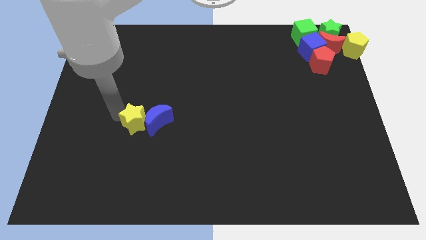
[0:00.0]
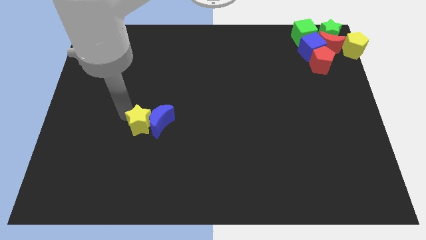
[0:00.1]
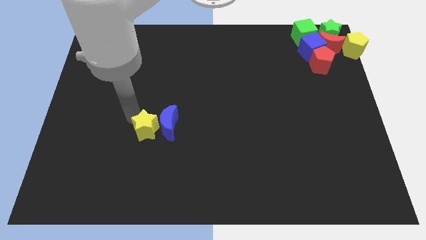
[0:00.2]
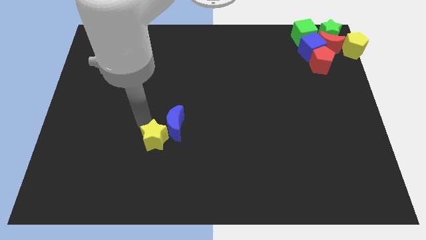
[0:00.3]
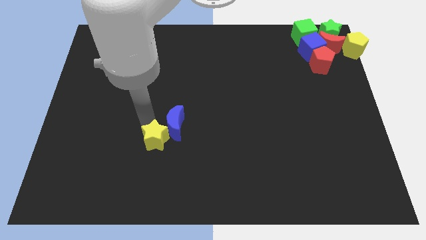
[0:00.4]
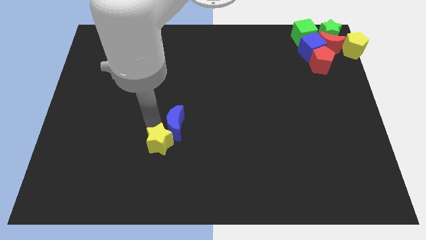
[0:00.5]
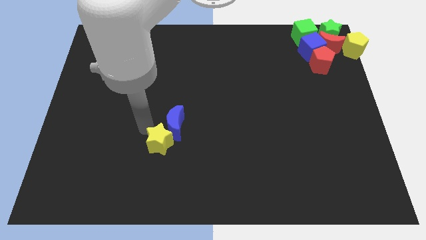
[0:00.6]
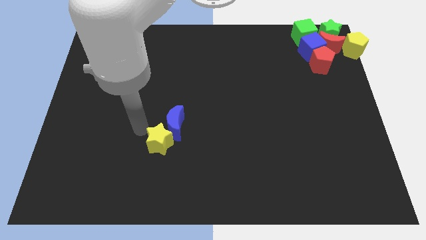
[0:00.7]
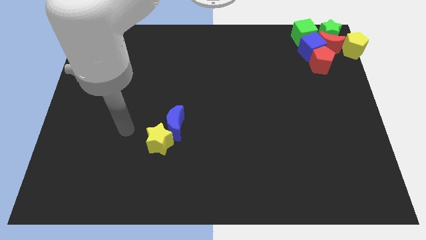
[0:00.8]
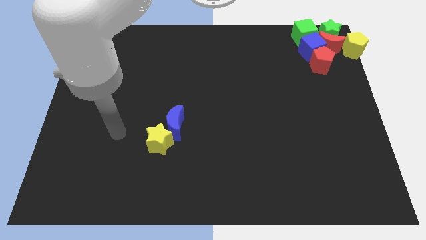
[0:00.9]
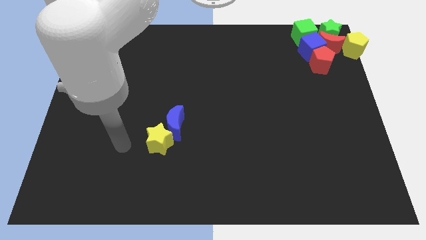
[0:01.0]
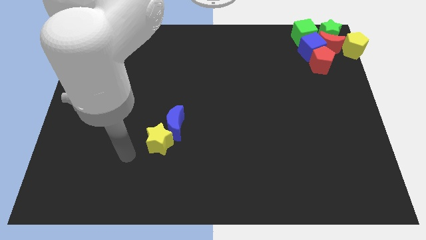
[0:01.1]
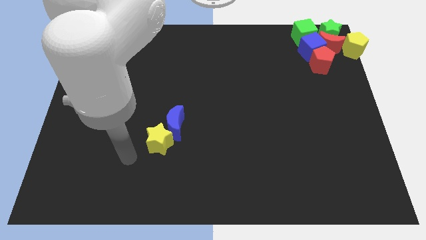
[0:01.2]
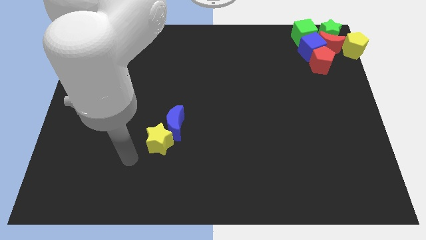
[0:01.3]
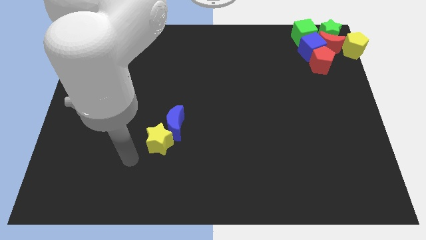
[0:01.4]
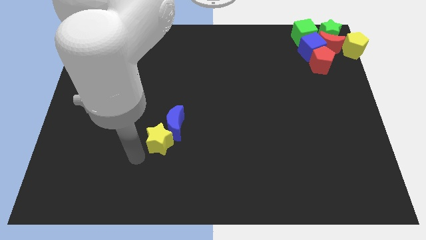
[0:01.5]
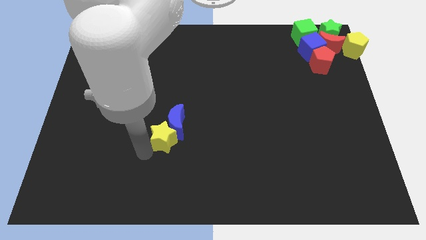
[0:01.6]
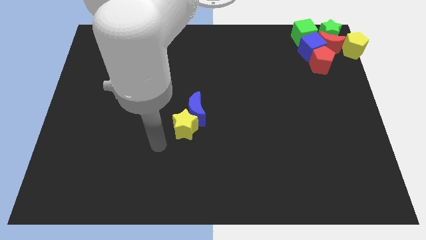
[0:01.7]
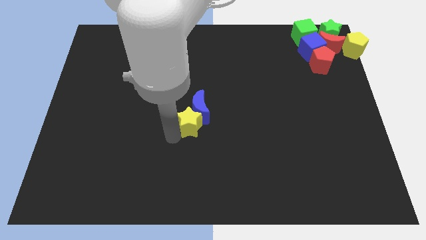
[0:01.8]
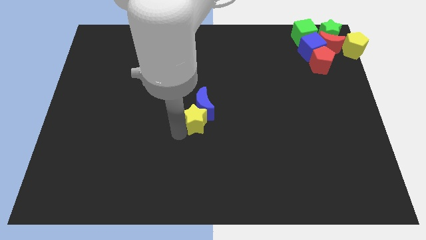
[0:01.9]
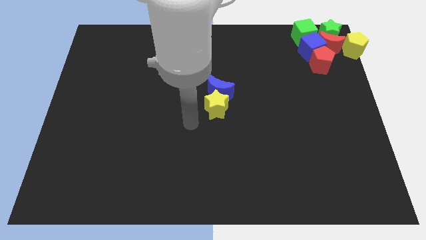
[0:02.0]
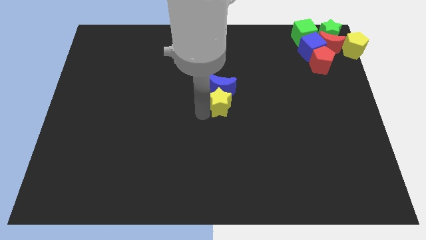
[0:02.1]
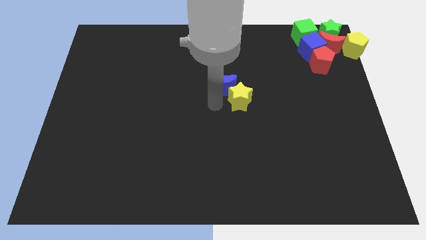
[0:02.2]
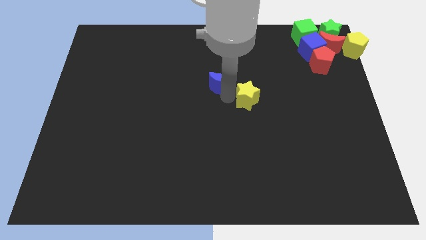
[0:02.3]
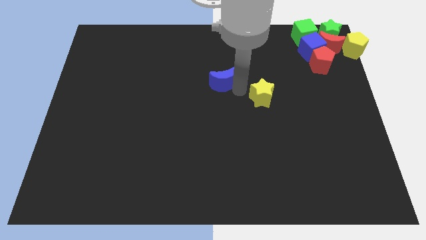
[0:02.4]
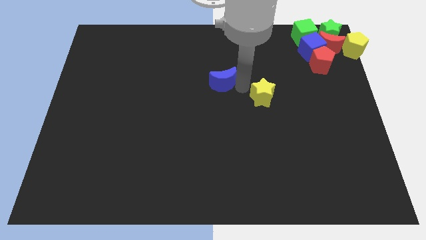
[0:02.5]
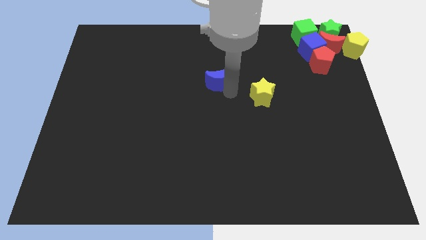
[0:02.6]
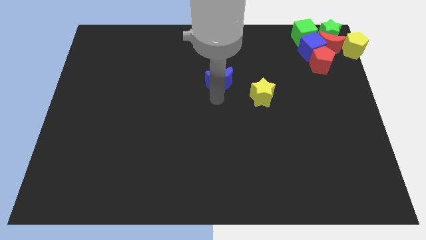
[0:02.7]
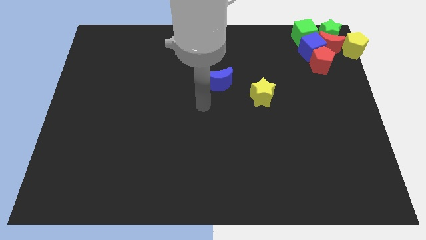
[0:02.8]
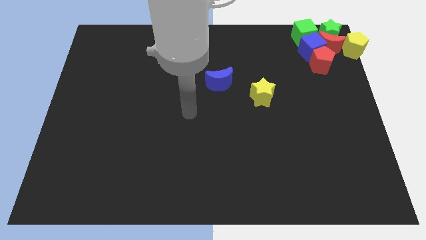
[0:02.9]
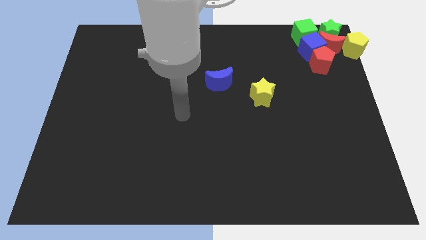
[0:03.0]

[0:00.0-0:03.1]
push the blue moon and yellow star towards the group of blocks

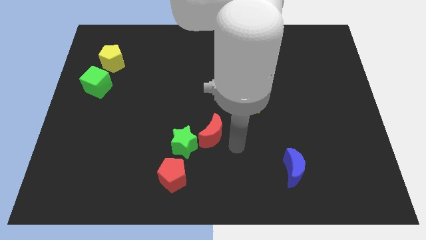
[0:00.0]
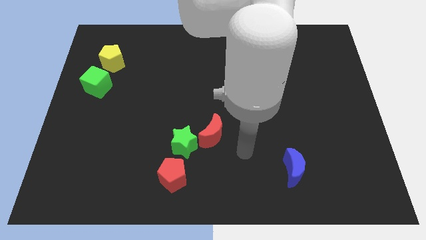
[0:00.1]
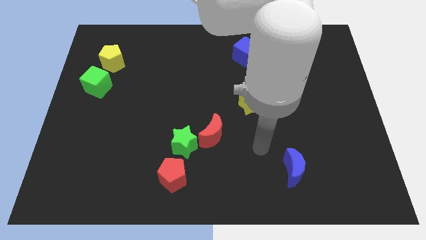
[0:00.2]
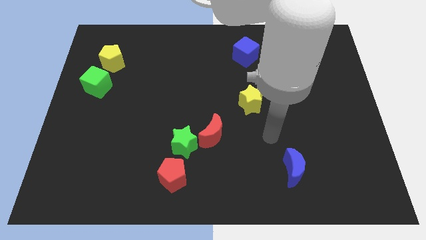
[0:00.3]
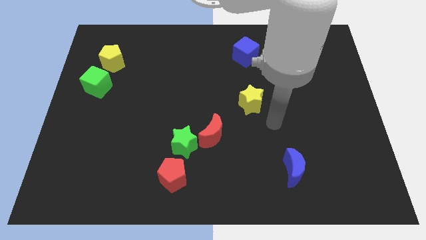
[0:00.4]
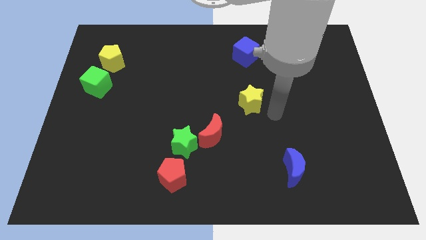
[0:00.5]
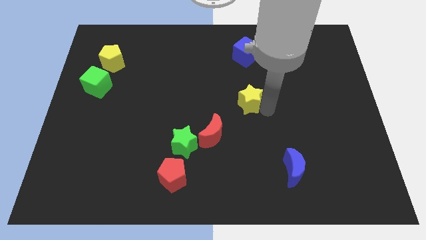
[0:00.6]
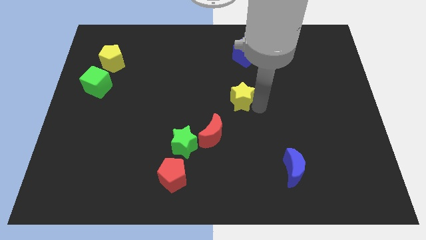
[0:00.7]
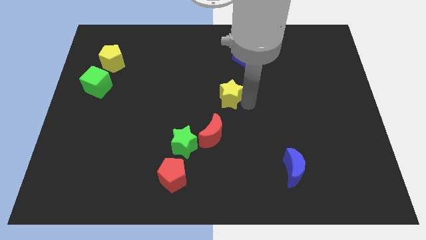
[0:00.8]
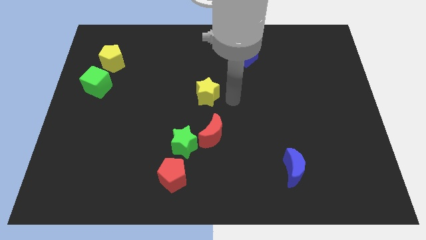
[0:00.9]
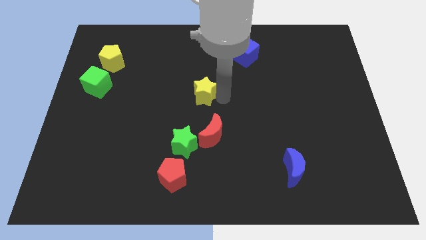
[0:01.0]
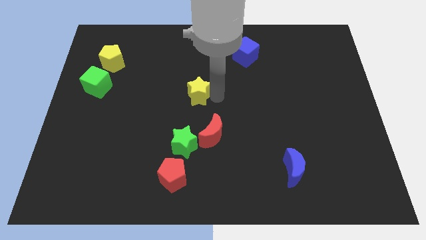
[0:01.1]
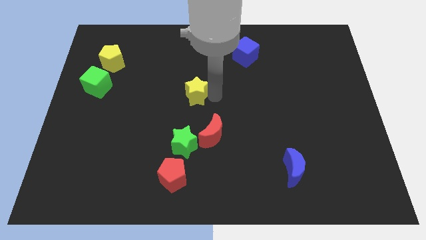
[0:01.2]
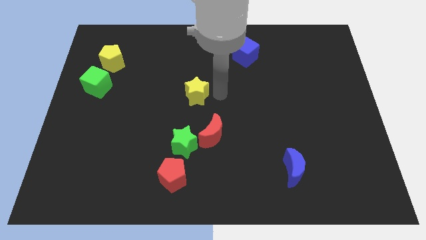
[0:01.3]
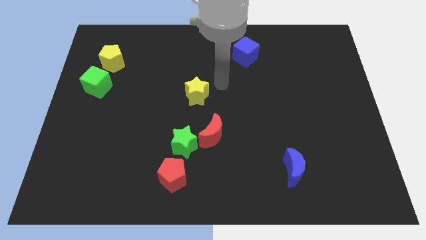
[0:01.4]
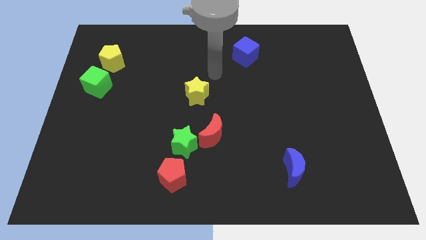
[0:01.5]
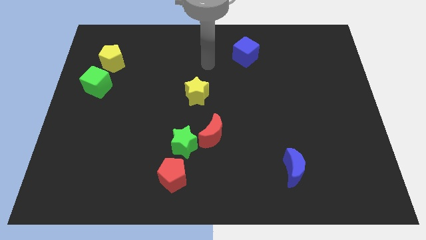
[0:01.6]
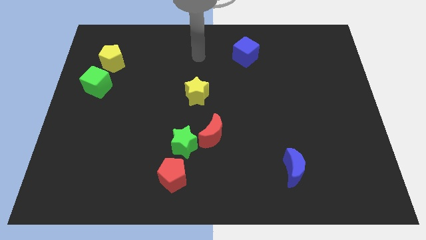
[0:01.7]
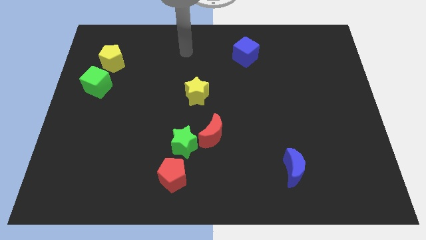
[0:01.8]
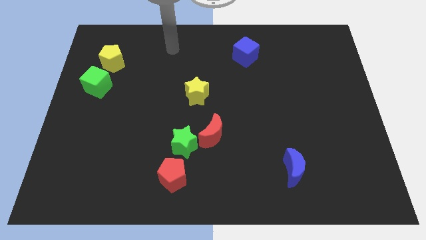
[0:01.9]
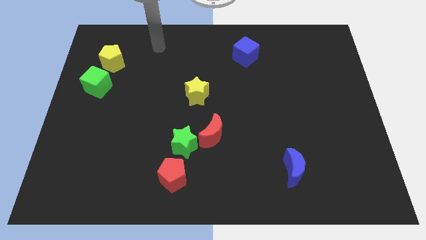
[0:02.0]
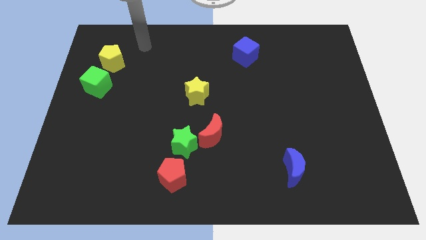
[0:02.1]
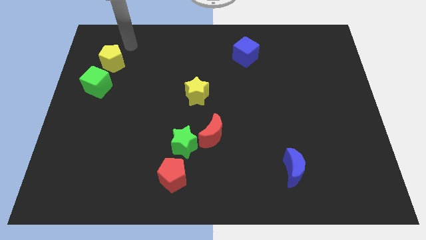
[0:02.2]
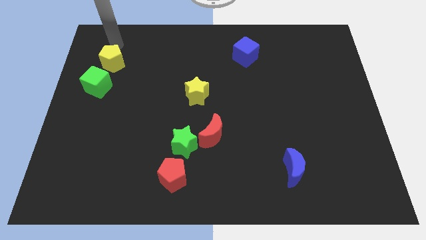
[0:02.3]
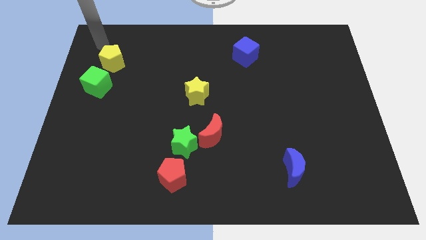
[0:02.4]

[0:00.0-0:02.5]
move your arm towards yellow pentagon

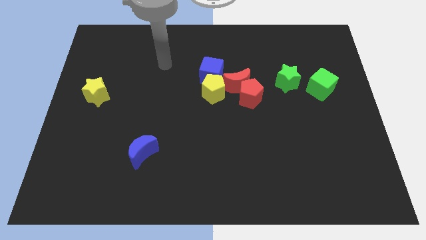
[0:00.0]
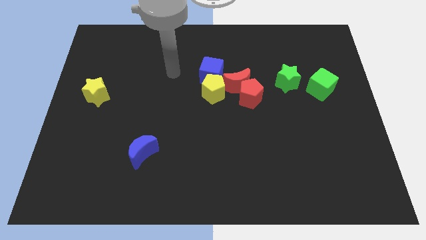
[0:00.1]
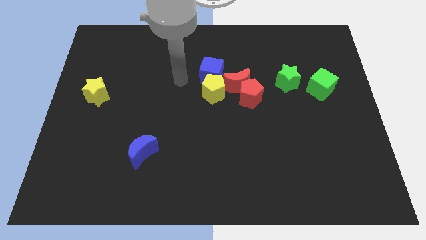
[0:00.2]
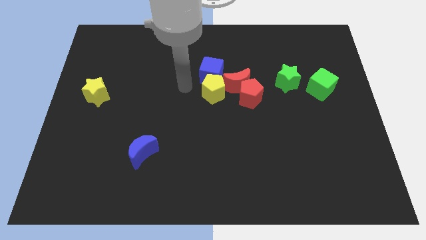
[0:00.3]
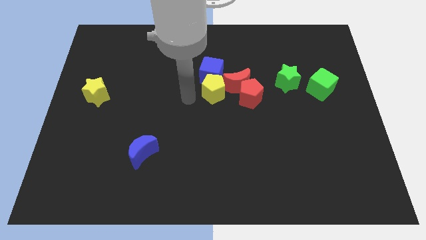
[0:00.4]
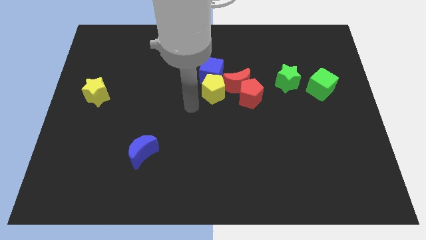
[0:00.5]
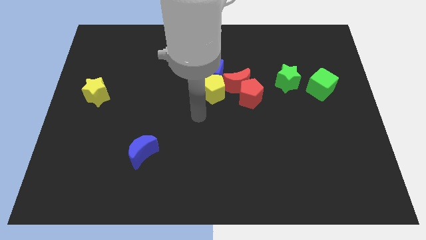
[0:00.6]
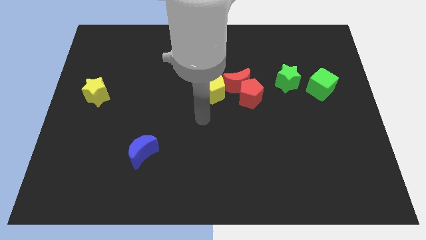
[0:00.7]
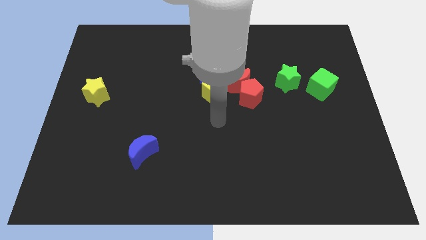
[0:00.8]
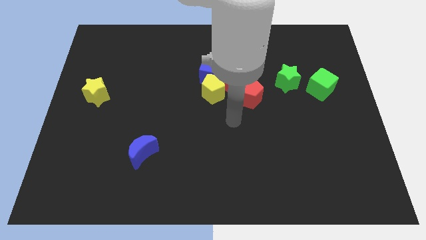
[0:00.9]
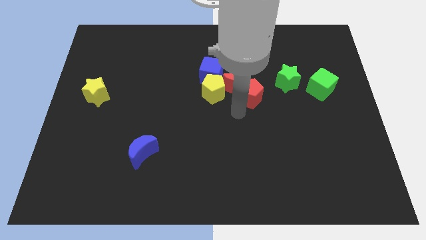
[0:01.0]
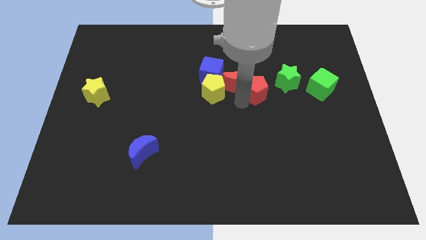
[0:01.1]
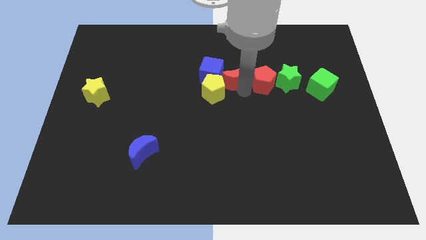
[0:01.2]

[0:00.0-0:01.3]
slightly move the red pentagon with your arm

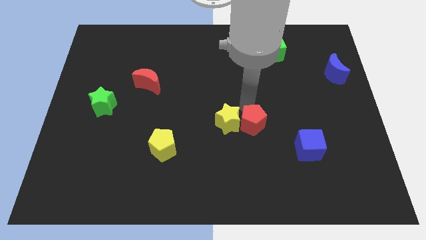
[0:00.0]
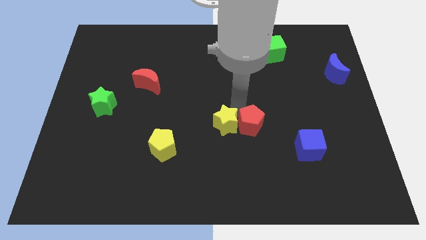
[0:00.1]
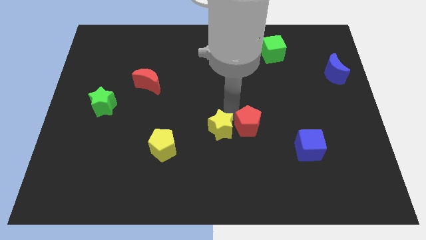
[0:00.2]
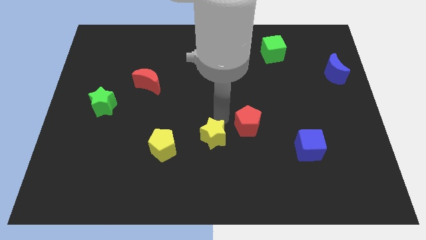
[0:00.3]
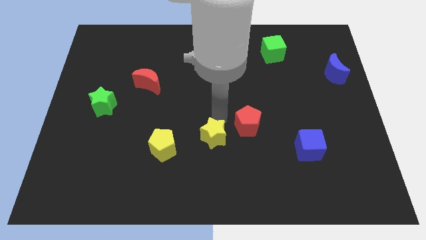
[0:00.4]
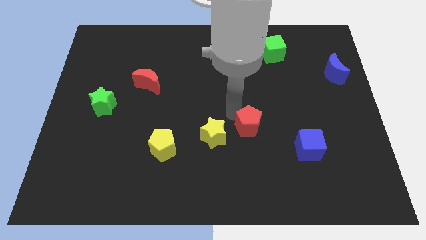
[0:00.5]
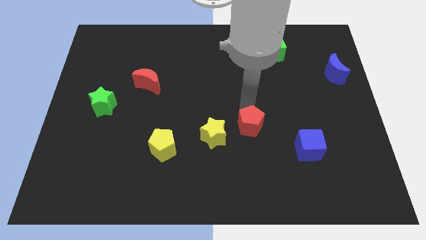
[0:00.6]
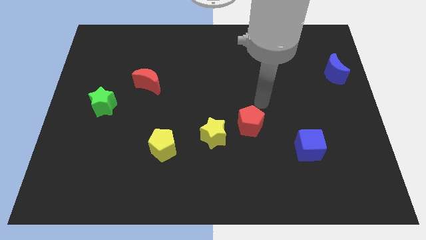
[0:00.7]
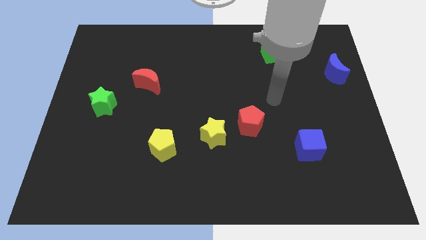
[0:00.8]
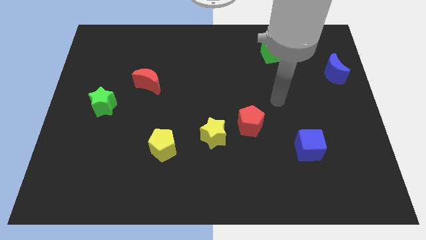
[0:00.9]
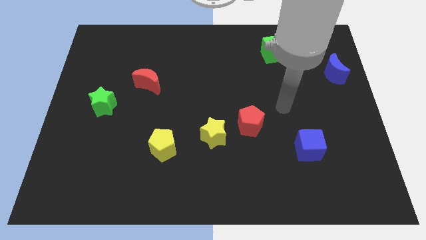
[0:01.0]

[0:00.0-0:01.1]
apart yellow star and red pentagon

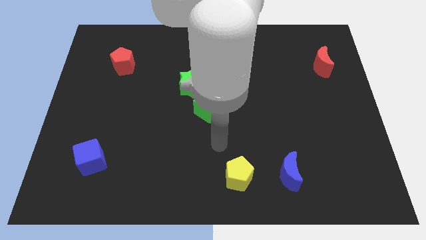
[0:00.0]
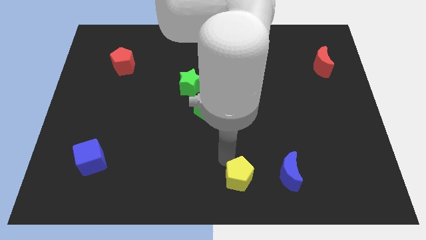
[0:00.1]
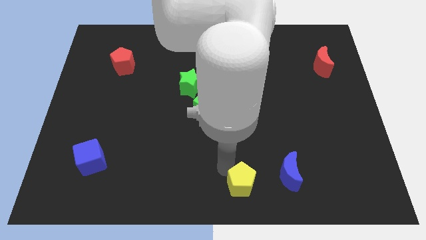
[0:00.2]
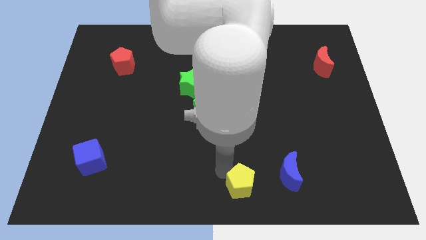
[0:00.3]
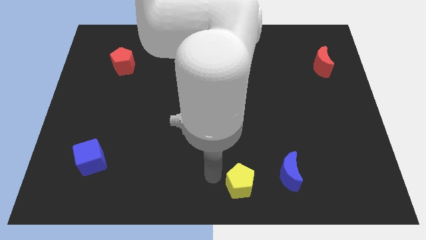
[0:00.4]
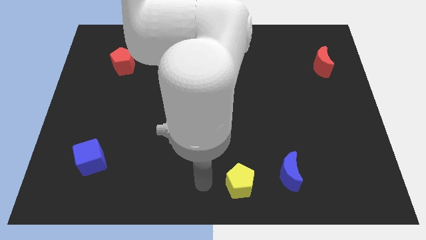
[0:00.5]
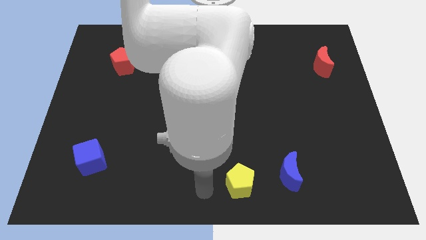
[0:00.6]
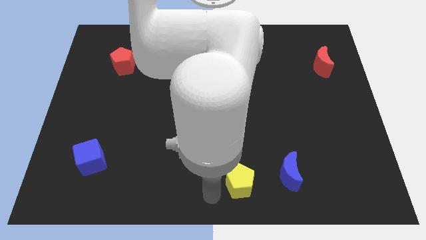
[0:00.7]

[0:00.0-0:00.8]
slightly push the yellow pentagon

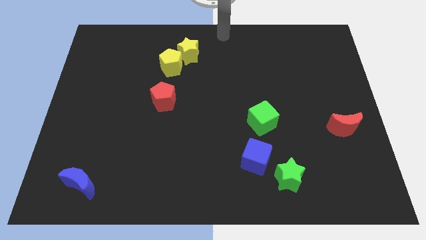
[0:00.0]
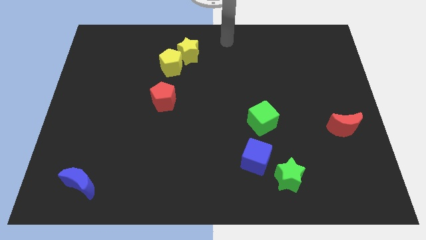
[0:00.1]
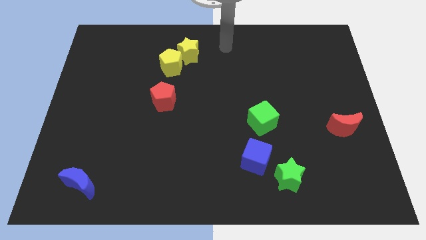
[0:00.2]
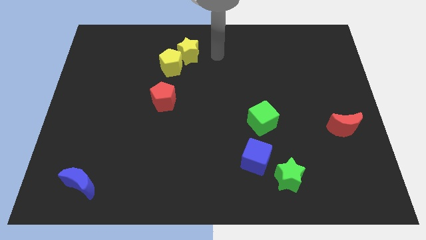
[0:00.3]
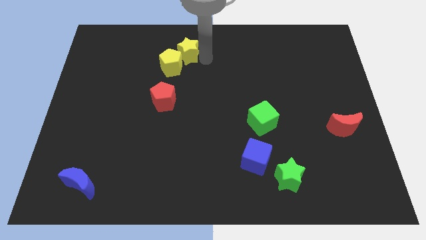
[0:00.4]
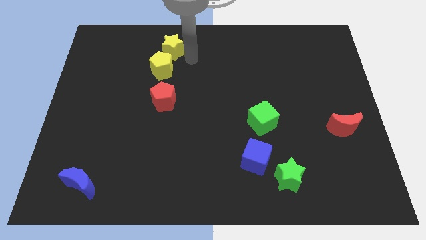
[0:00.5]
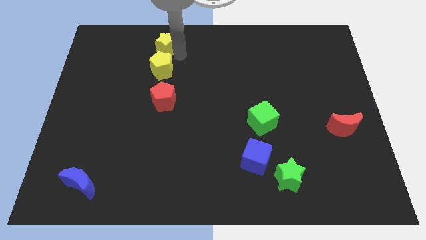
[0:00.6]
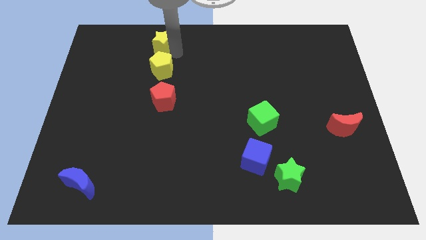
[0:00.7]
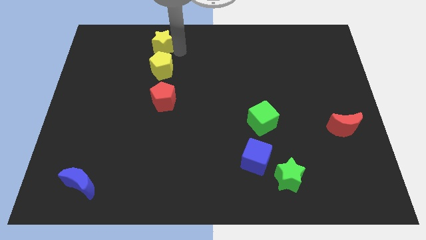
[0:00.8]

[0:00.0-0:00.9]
move yellow star above yellow pentagon
